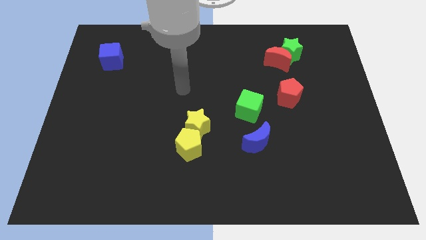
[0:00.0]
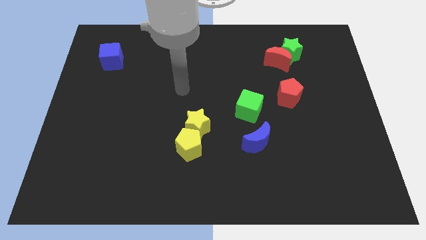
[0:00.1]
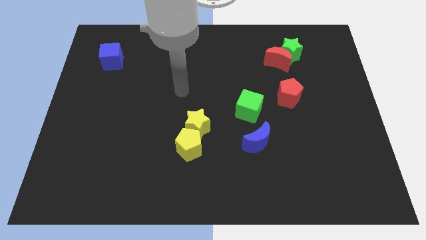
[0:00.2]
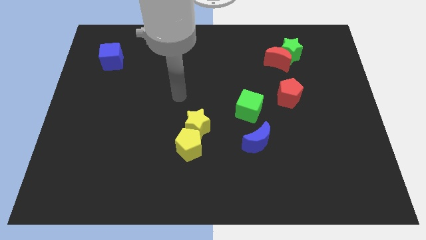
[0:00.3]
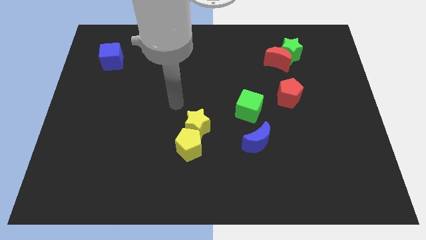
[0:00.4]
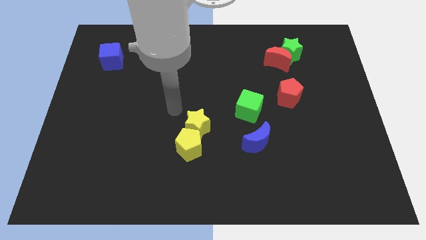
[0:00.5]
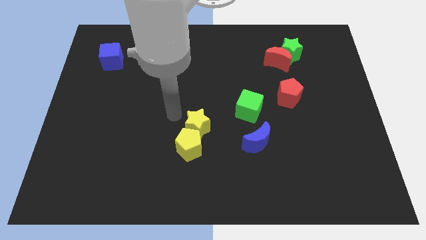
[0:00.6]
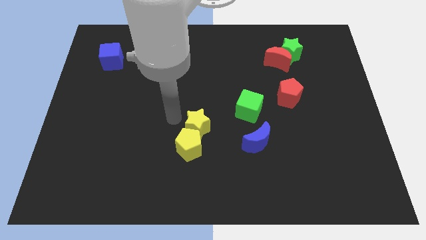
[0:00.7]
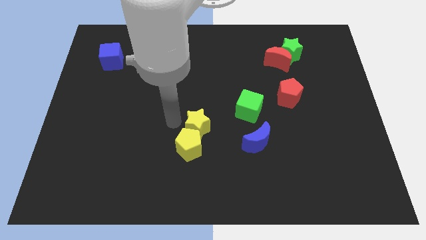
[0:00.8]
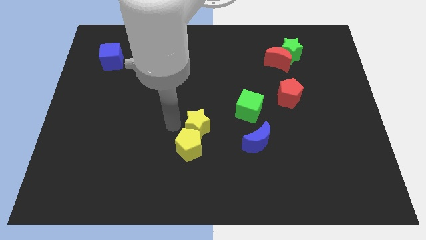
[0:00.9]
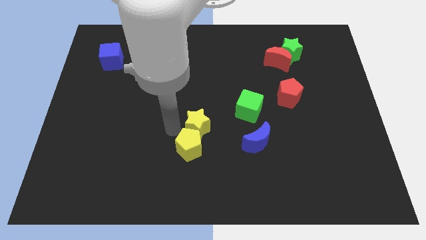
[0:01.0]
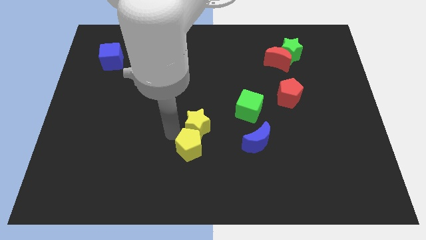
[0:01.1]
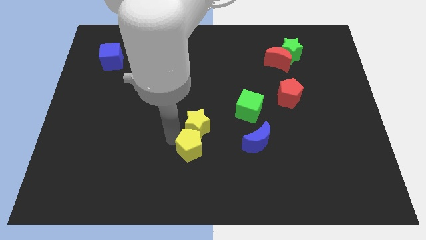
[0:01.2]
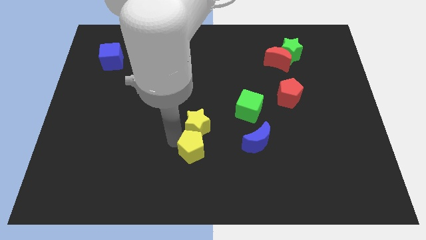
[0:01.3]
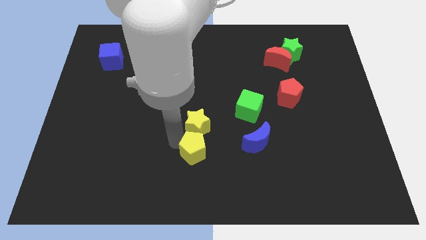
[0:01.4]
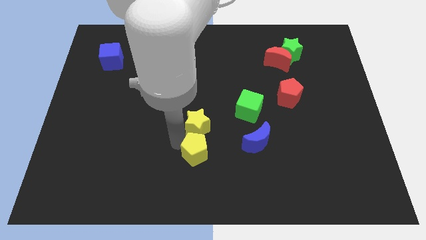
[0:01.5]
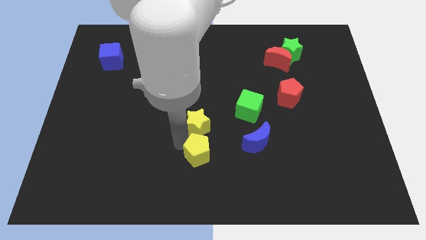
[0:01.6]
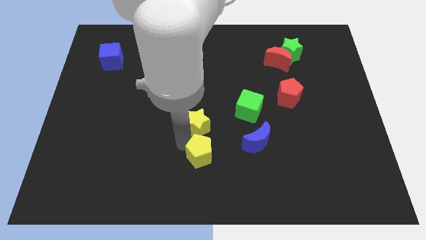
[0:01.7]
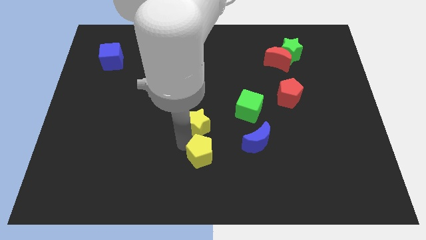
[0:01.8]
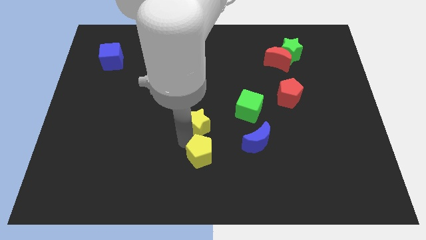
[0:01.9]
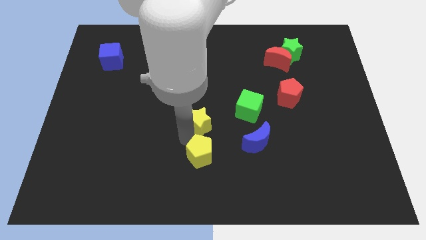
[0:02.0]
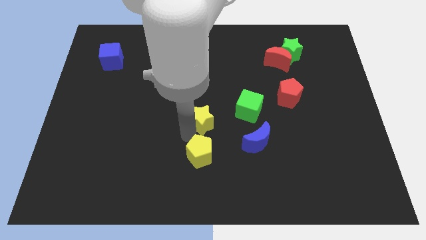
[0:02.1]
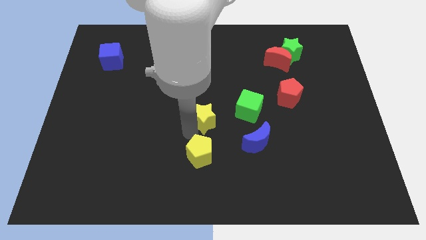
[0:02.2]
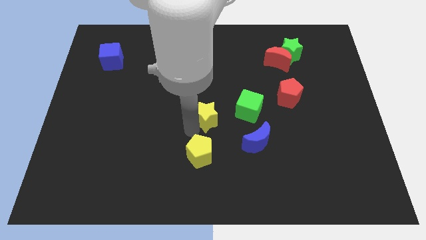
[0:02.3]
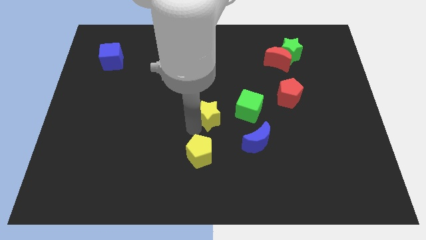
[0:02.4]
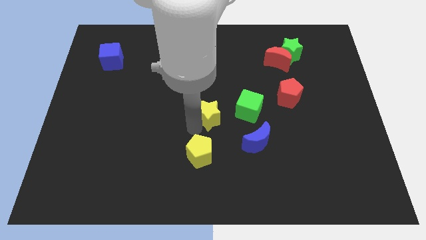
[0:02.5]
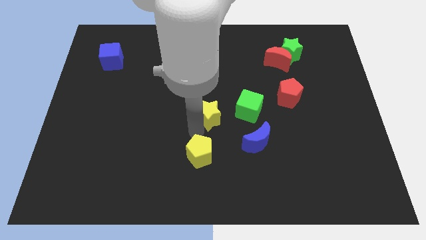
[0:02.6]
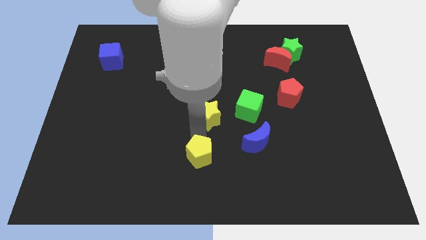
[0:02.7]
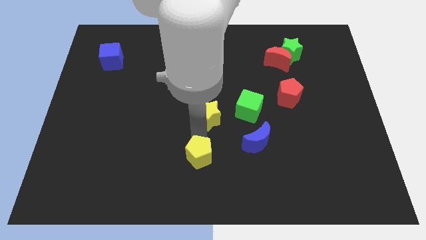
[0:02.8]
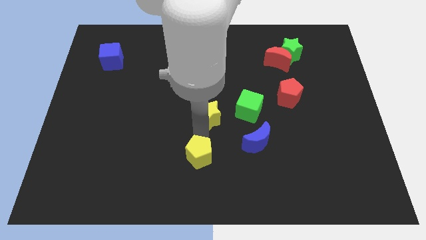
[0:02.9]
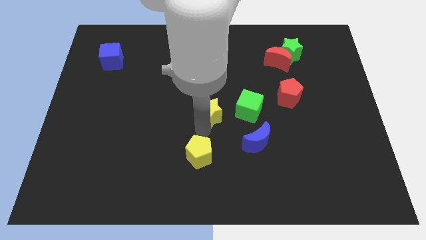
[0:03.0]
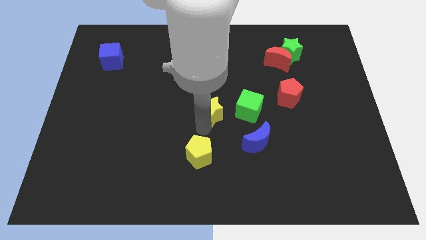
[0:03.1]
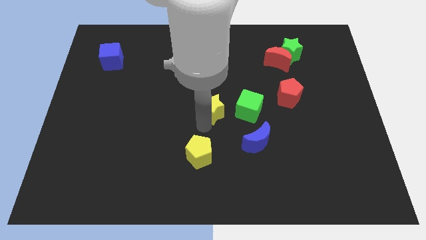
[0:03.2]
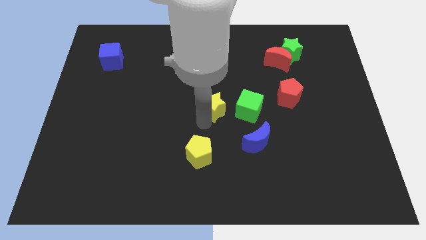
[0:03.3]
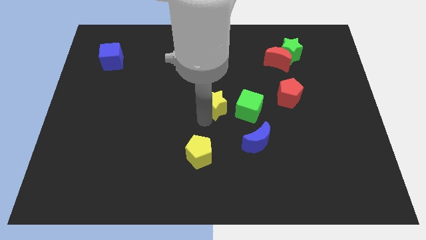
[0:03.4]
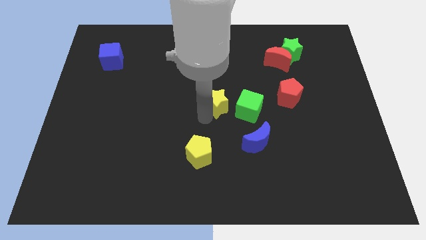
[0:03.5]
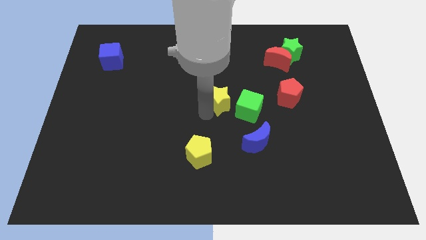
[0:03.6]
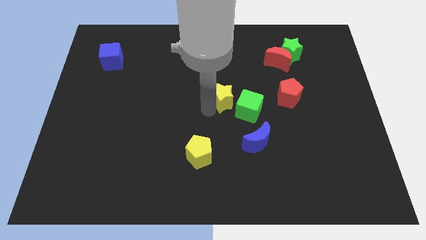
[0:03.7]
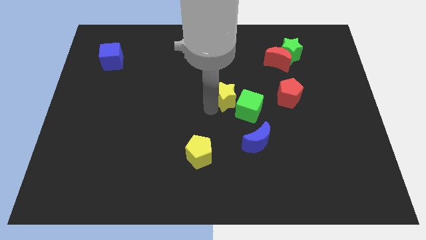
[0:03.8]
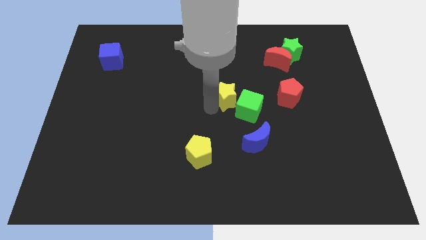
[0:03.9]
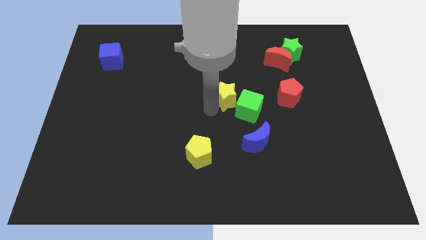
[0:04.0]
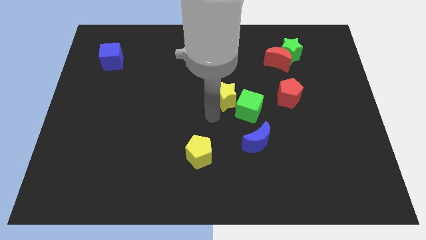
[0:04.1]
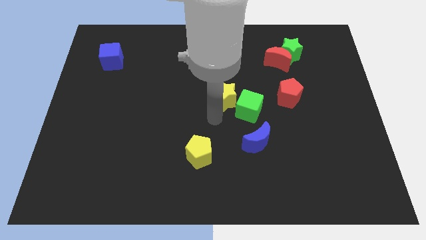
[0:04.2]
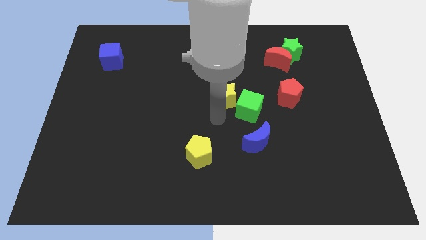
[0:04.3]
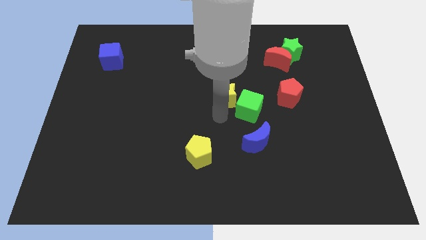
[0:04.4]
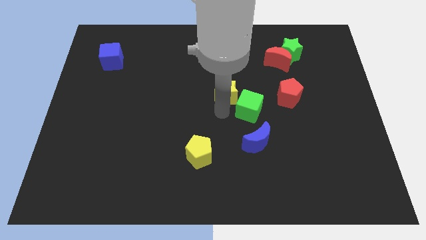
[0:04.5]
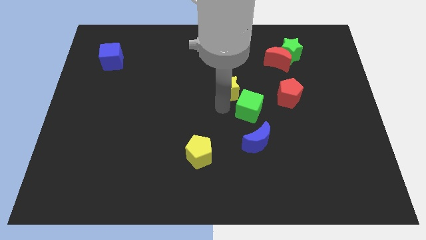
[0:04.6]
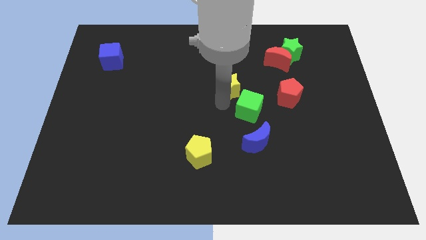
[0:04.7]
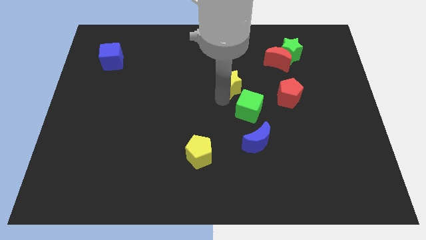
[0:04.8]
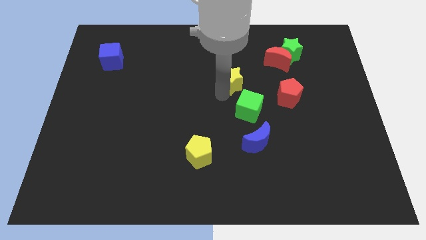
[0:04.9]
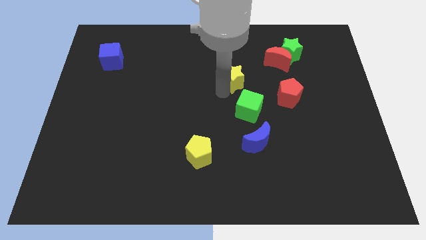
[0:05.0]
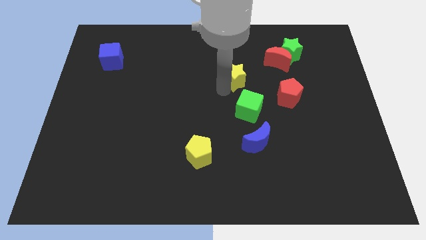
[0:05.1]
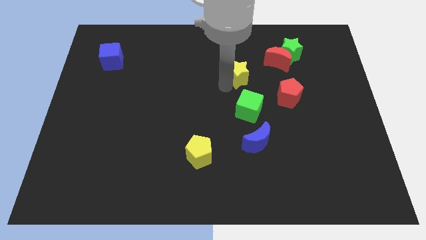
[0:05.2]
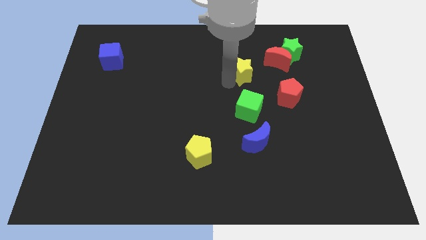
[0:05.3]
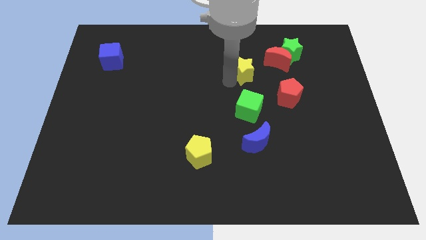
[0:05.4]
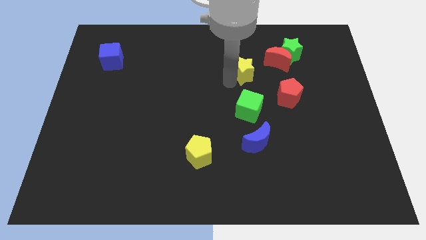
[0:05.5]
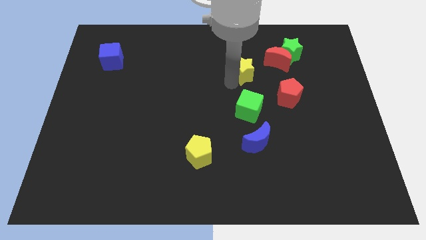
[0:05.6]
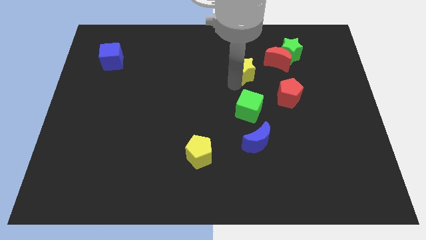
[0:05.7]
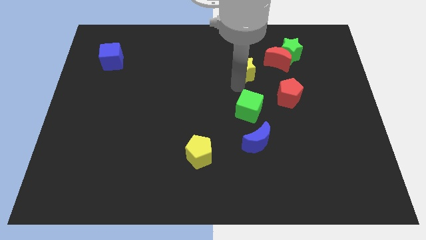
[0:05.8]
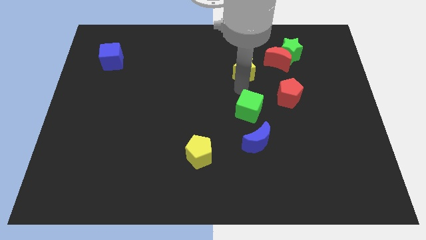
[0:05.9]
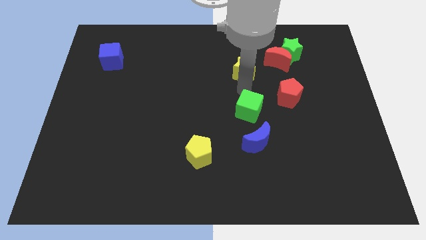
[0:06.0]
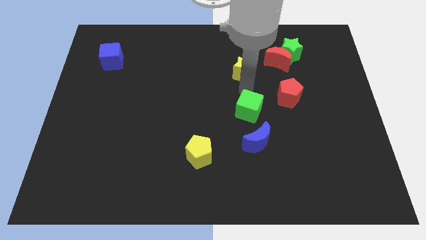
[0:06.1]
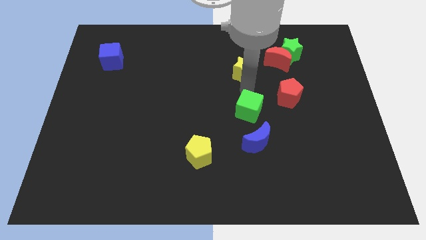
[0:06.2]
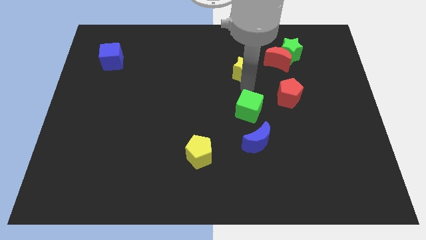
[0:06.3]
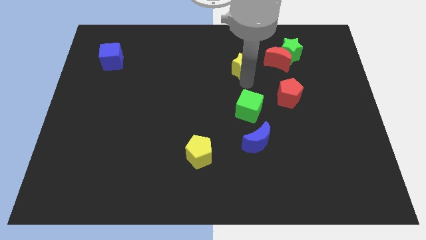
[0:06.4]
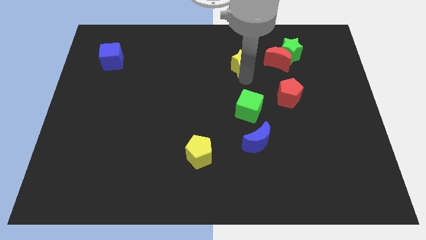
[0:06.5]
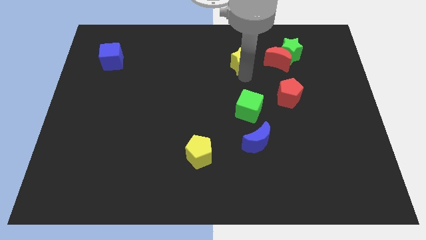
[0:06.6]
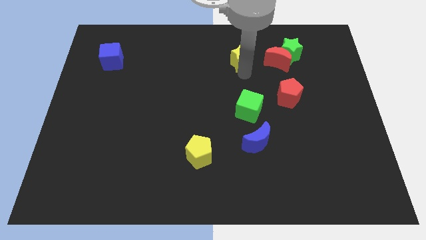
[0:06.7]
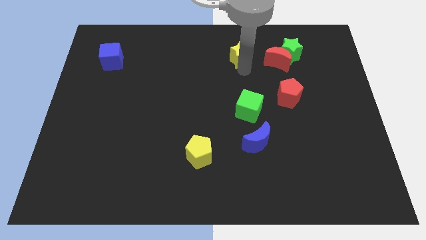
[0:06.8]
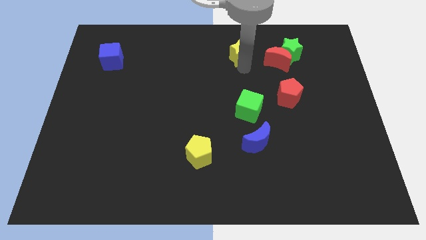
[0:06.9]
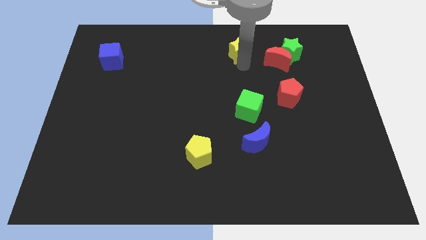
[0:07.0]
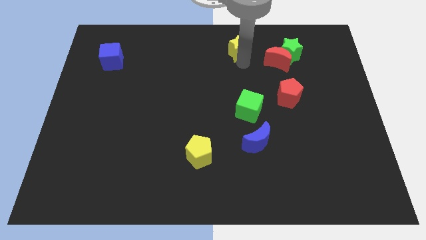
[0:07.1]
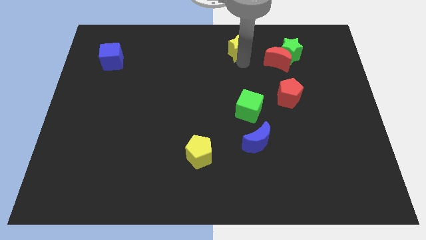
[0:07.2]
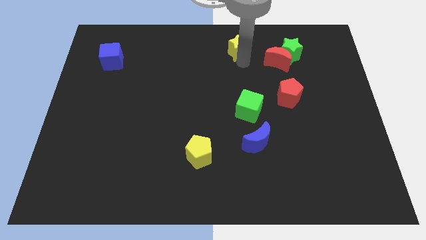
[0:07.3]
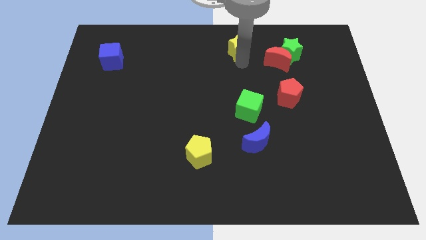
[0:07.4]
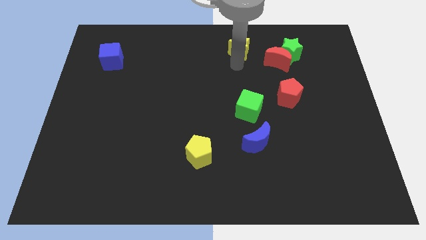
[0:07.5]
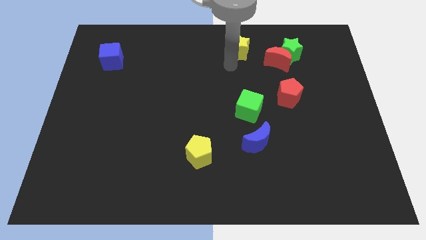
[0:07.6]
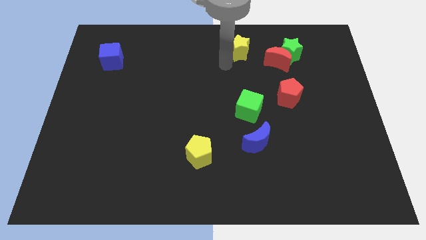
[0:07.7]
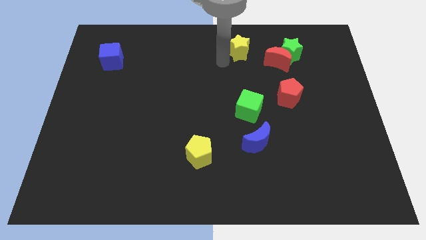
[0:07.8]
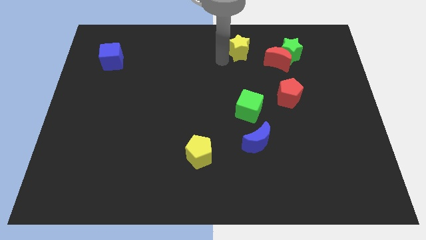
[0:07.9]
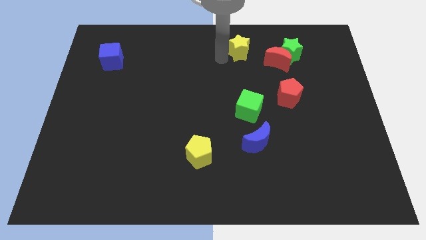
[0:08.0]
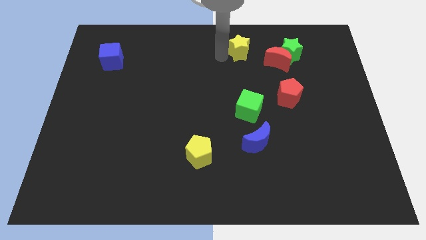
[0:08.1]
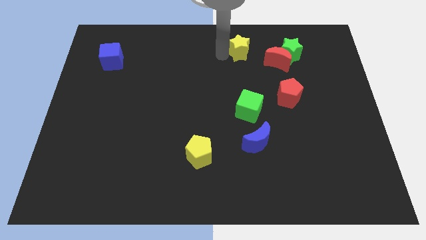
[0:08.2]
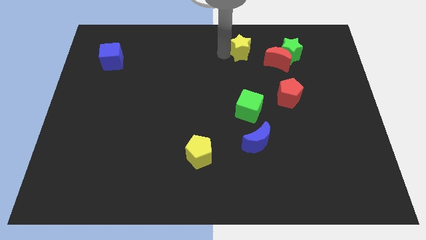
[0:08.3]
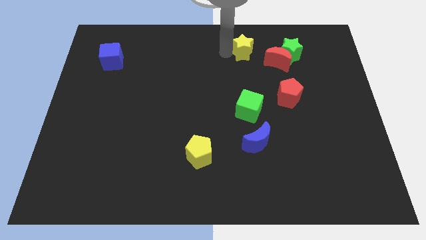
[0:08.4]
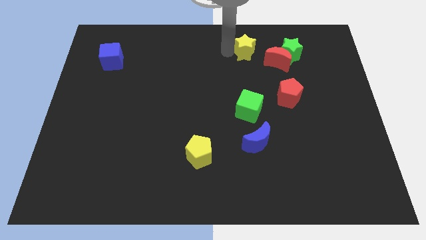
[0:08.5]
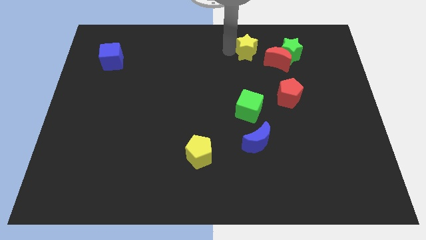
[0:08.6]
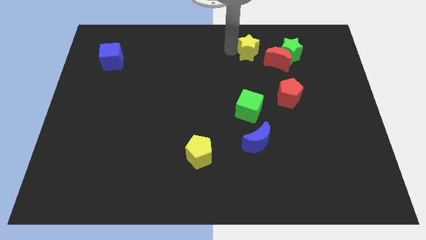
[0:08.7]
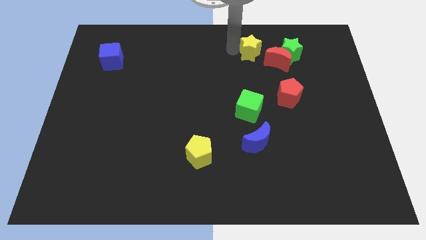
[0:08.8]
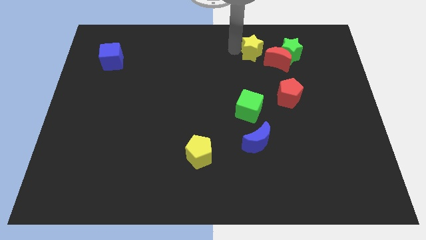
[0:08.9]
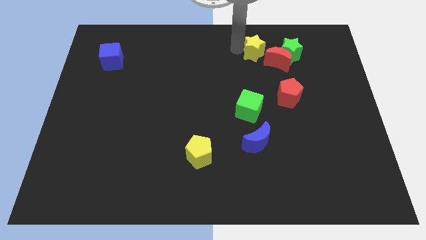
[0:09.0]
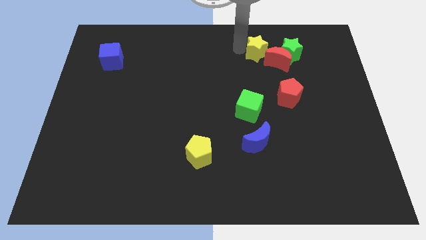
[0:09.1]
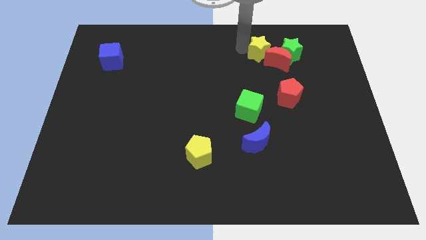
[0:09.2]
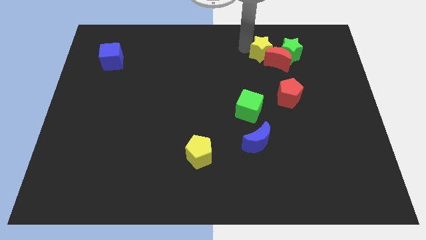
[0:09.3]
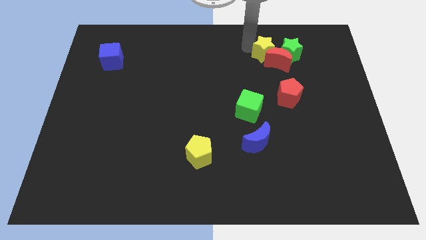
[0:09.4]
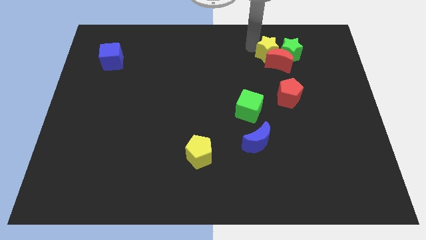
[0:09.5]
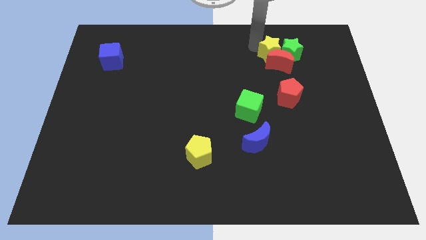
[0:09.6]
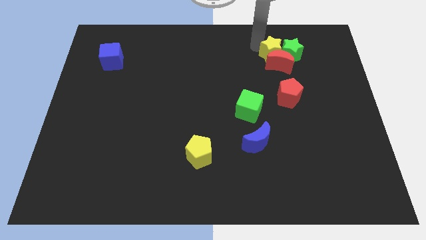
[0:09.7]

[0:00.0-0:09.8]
move the yellow star next to the green star
